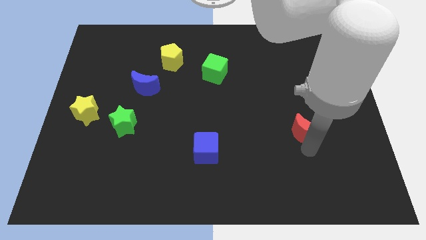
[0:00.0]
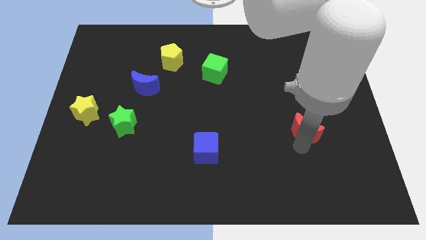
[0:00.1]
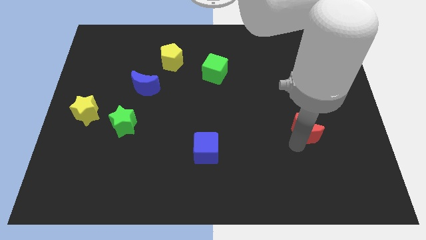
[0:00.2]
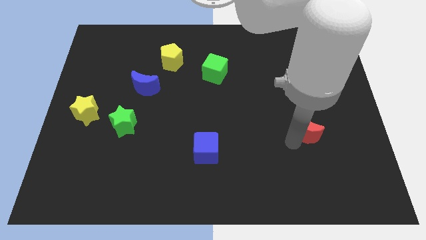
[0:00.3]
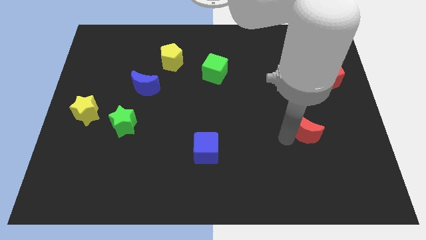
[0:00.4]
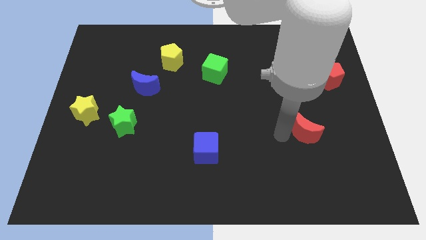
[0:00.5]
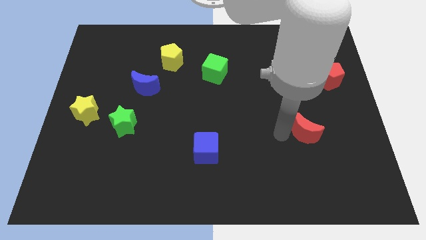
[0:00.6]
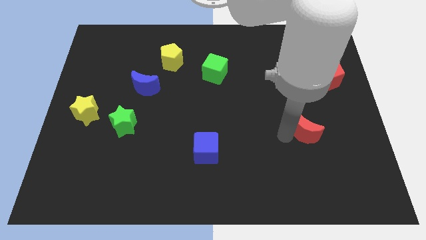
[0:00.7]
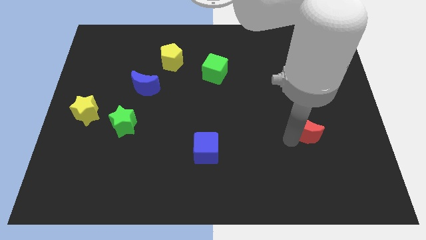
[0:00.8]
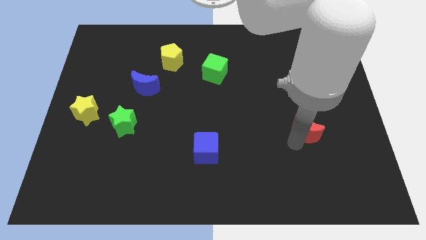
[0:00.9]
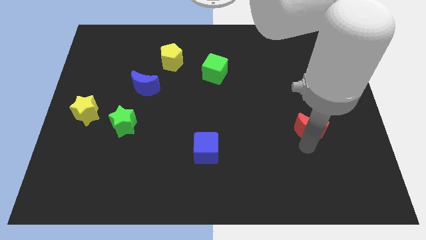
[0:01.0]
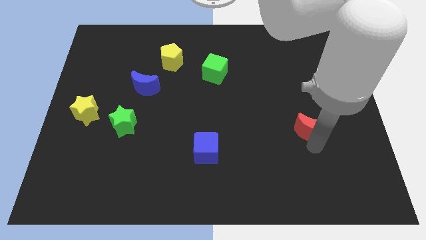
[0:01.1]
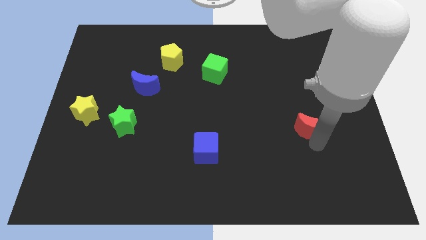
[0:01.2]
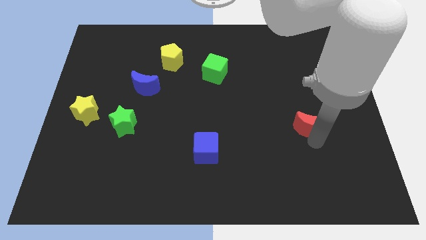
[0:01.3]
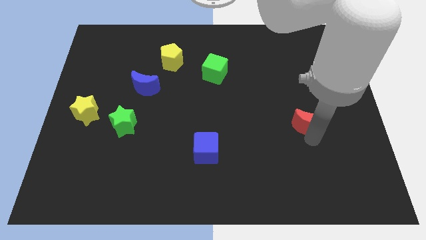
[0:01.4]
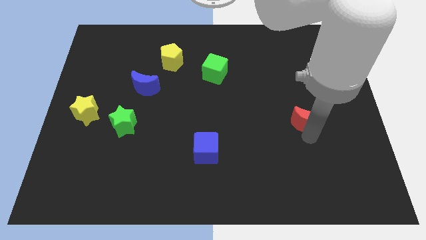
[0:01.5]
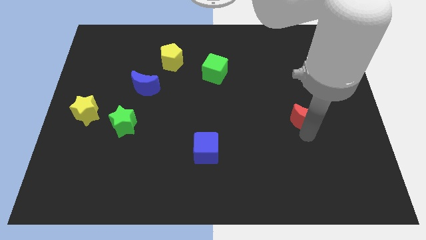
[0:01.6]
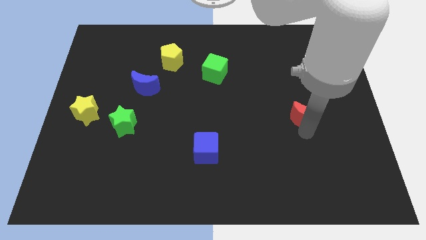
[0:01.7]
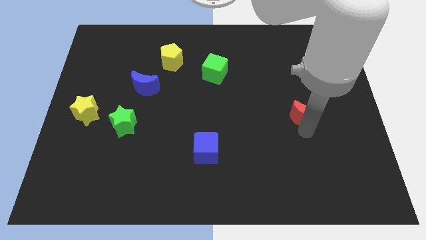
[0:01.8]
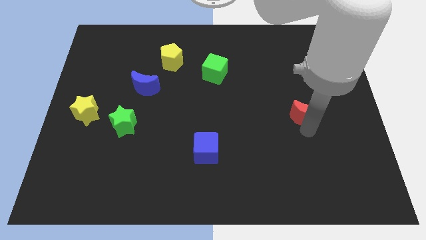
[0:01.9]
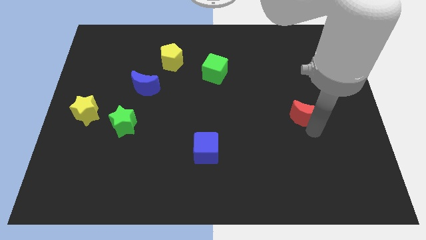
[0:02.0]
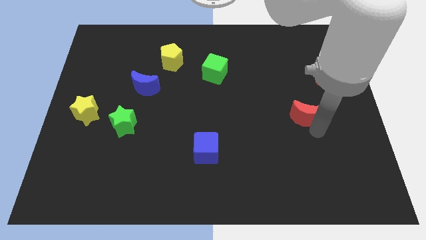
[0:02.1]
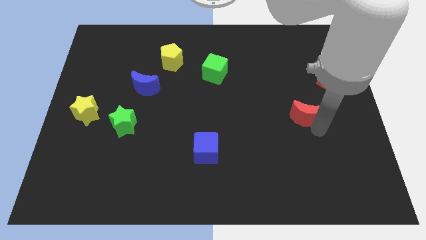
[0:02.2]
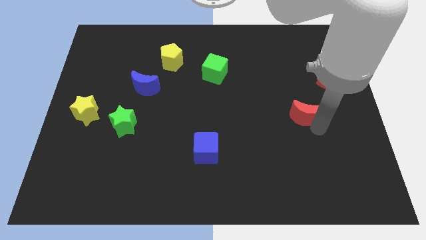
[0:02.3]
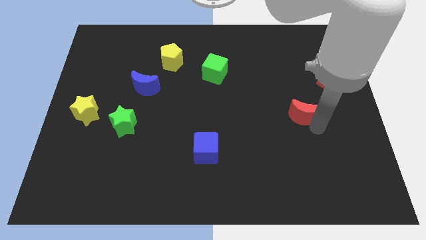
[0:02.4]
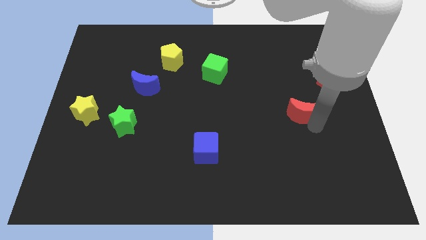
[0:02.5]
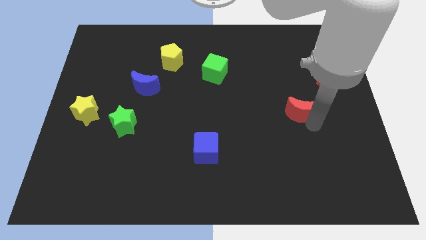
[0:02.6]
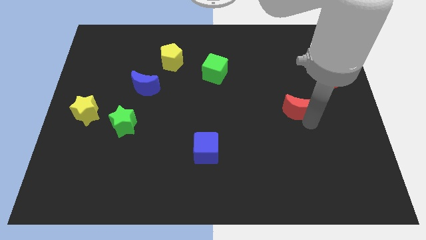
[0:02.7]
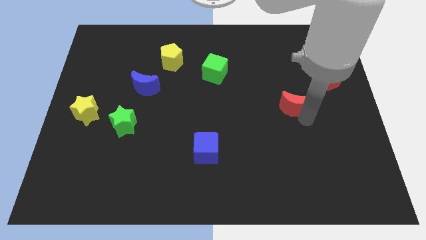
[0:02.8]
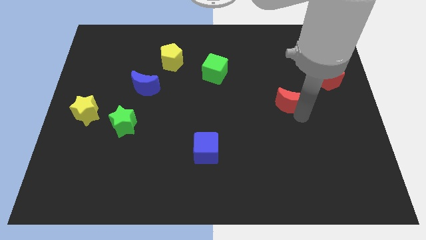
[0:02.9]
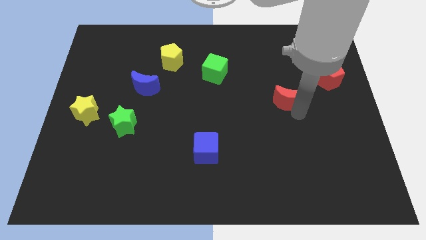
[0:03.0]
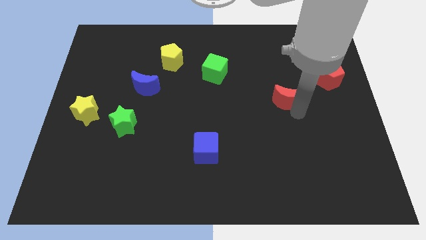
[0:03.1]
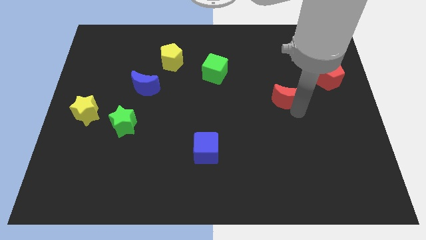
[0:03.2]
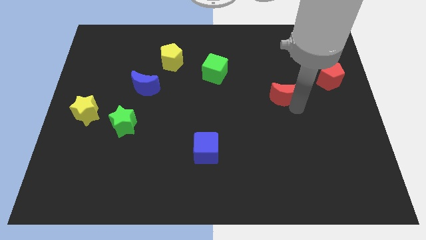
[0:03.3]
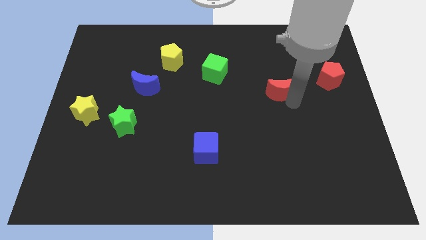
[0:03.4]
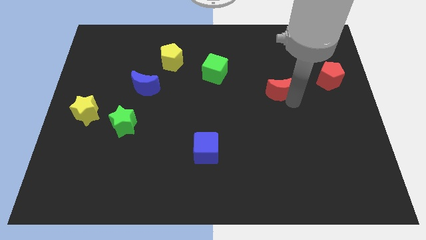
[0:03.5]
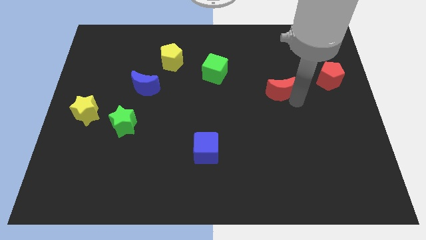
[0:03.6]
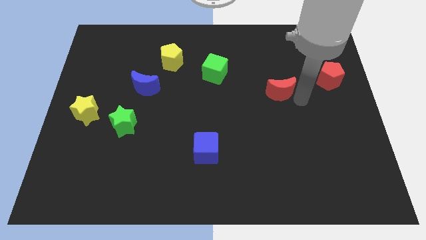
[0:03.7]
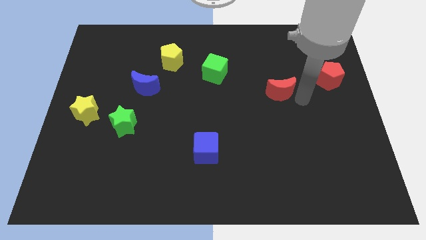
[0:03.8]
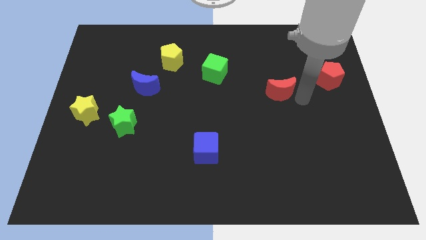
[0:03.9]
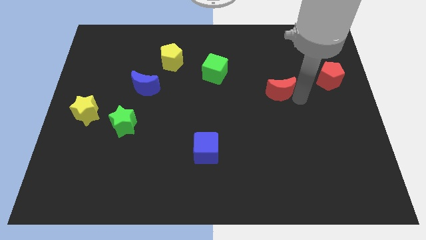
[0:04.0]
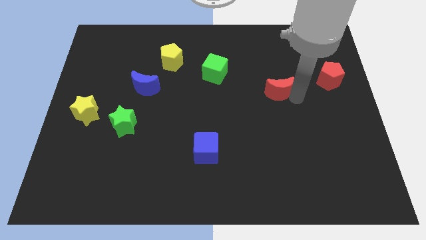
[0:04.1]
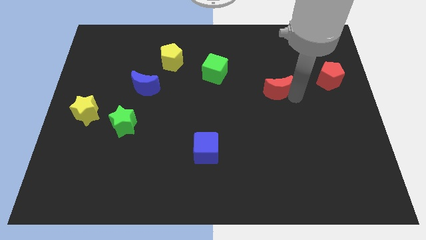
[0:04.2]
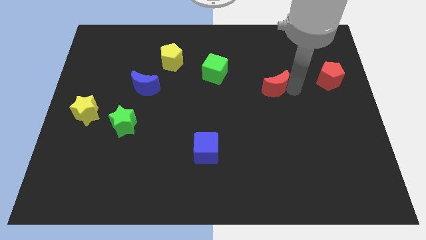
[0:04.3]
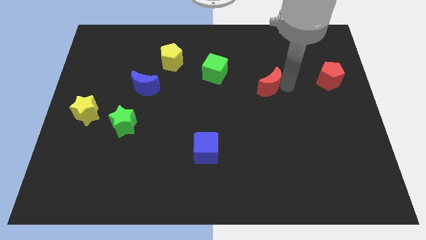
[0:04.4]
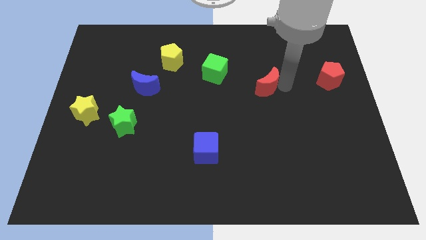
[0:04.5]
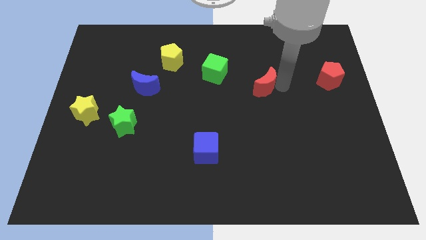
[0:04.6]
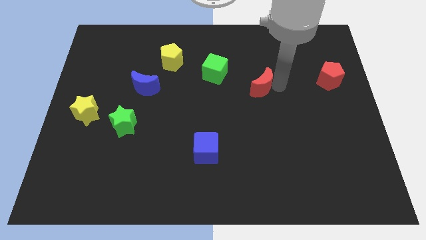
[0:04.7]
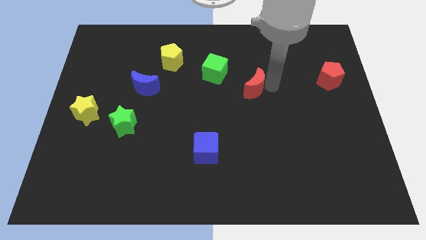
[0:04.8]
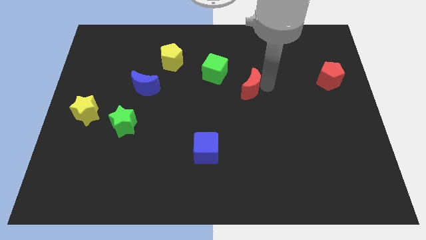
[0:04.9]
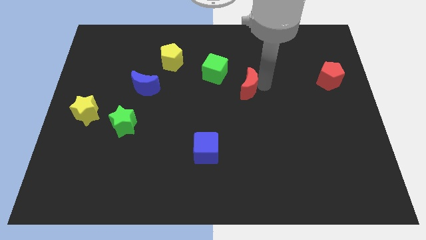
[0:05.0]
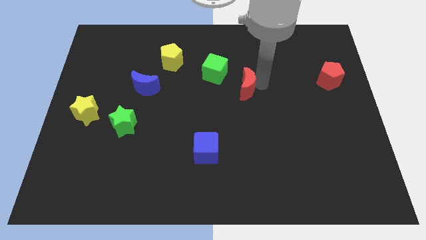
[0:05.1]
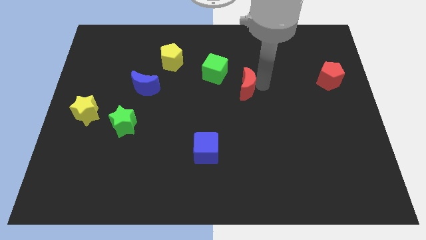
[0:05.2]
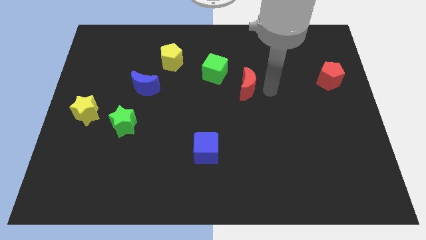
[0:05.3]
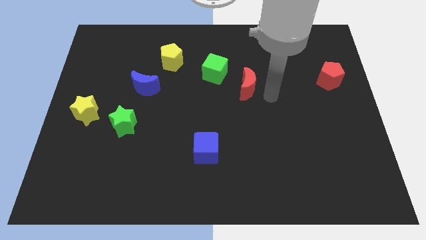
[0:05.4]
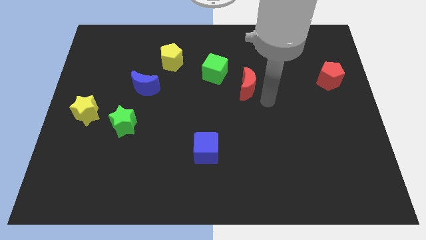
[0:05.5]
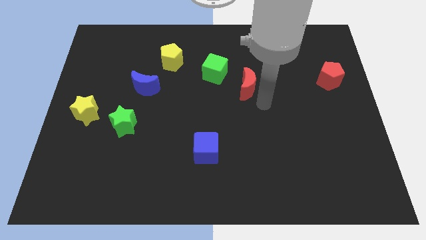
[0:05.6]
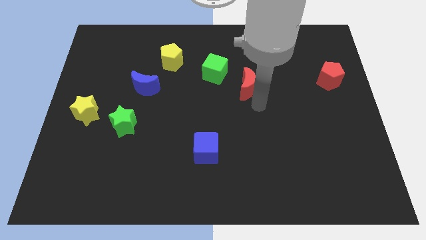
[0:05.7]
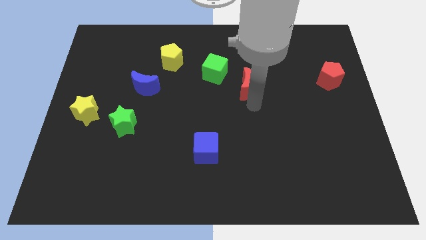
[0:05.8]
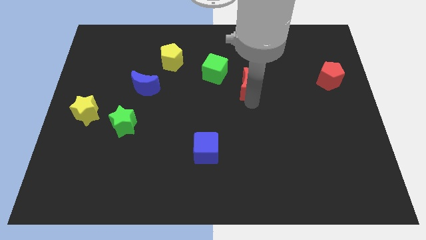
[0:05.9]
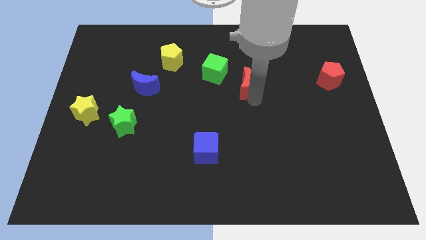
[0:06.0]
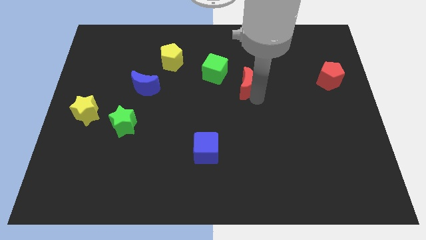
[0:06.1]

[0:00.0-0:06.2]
slide red moon towards green cube

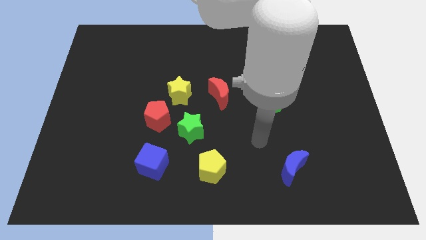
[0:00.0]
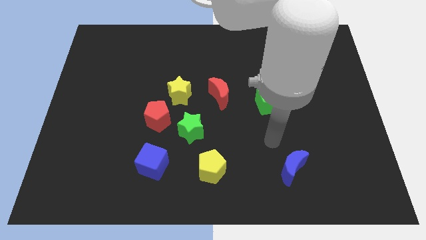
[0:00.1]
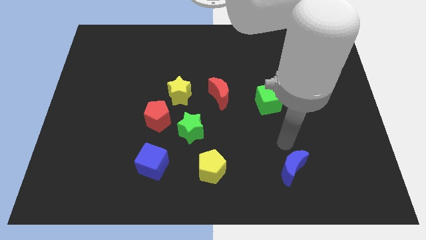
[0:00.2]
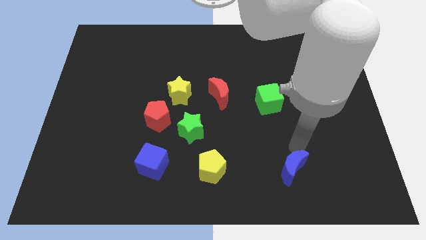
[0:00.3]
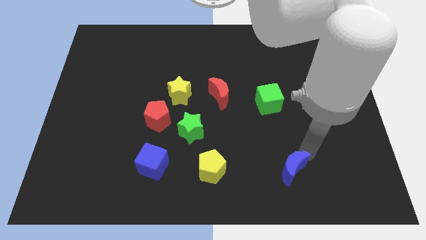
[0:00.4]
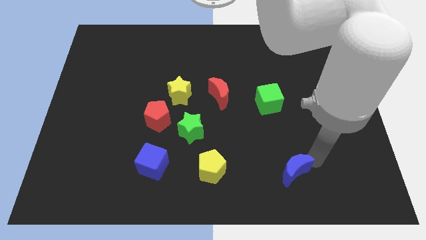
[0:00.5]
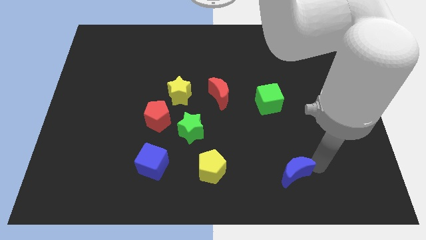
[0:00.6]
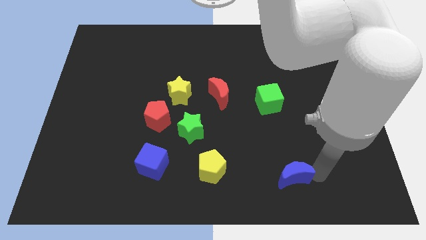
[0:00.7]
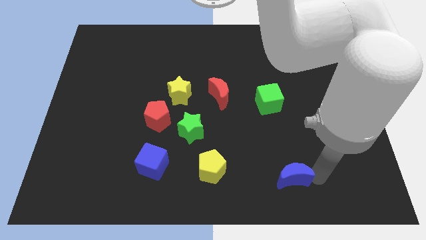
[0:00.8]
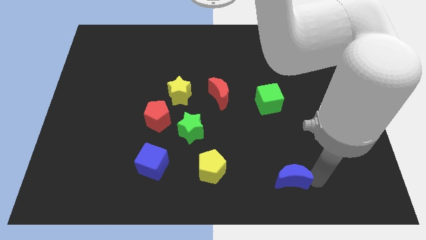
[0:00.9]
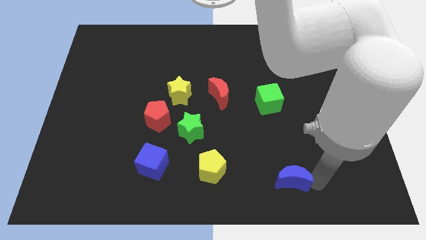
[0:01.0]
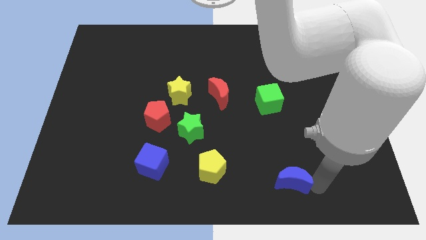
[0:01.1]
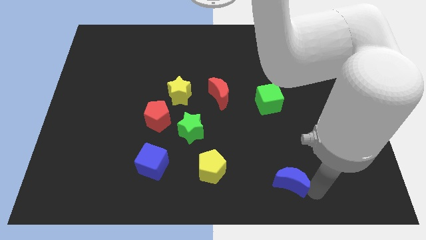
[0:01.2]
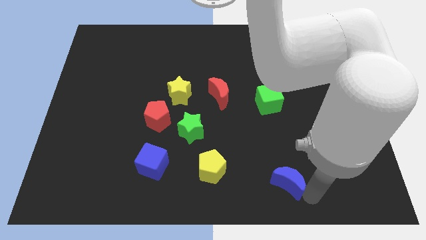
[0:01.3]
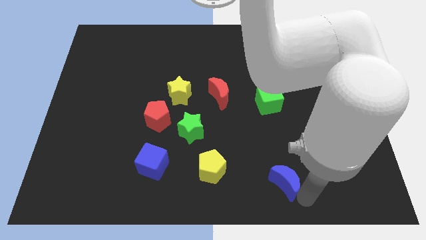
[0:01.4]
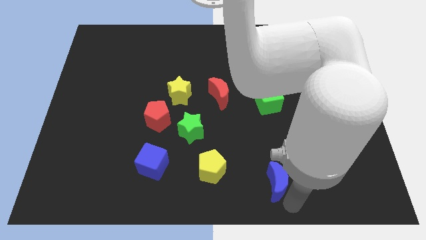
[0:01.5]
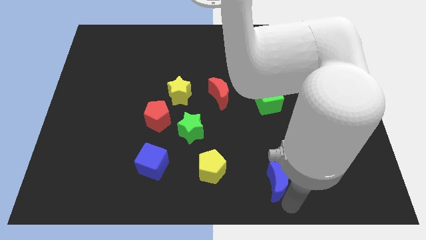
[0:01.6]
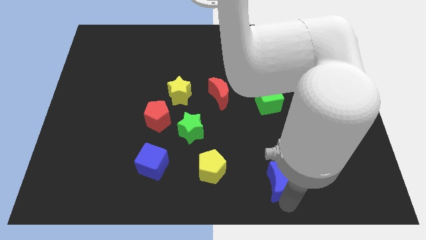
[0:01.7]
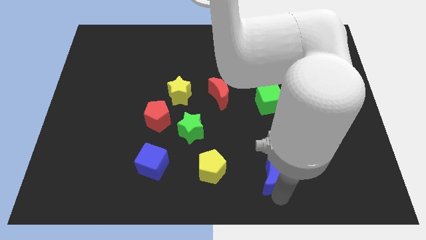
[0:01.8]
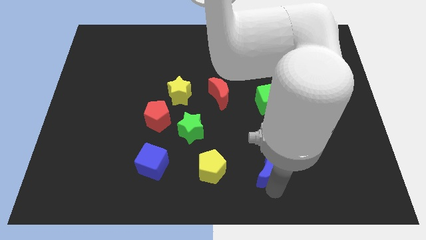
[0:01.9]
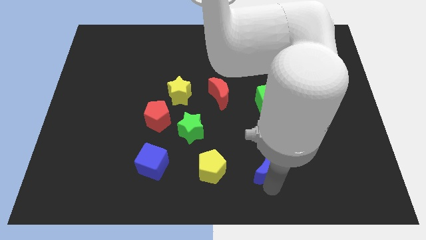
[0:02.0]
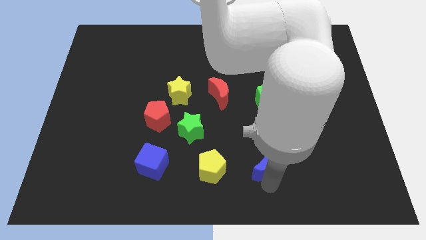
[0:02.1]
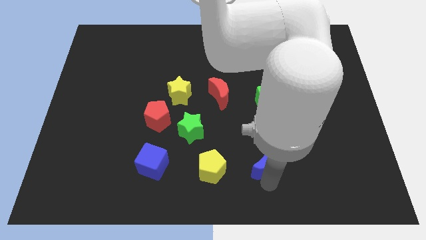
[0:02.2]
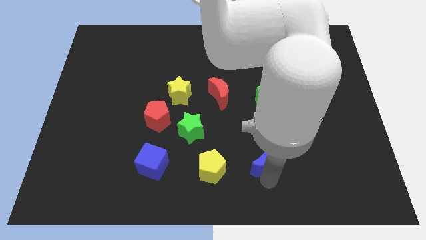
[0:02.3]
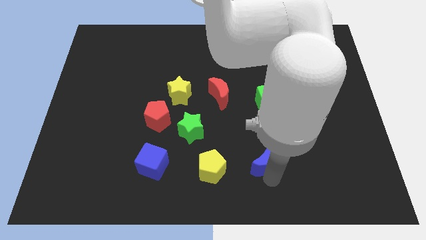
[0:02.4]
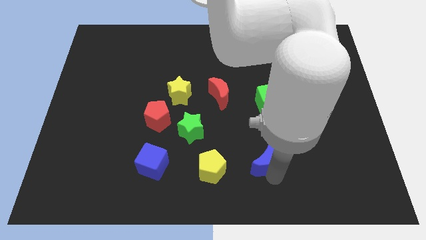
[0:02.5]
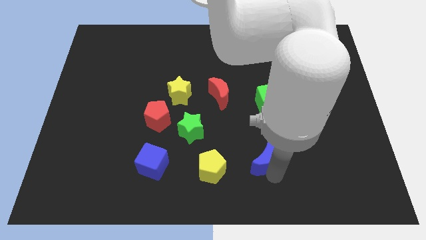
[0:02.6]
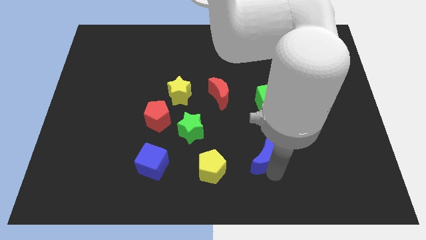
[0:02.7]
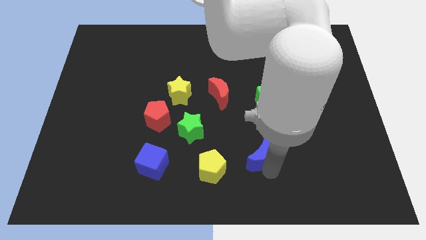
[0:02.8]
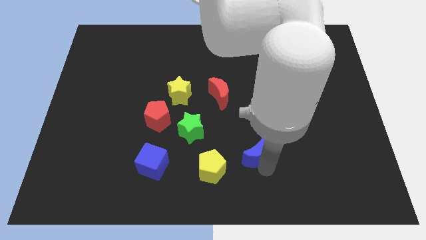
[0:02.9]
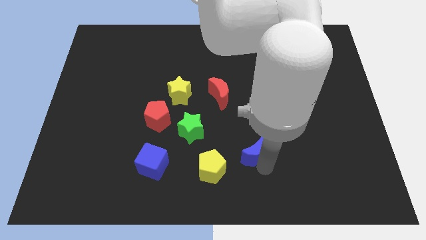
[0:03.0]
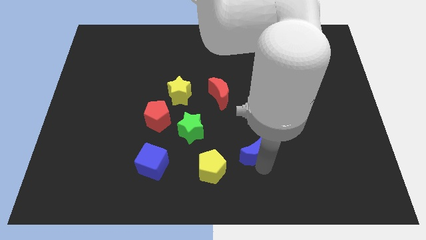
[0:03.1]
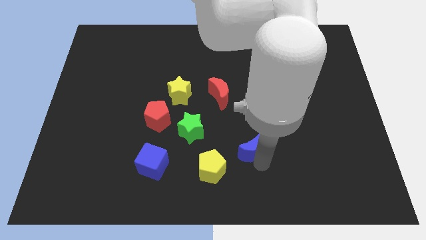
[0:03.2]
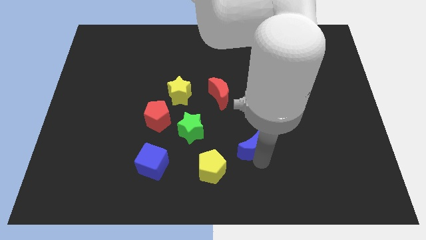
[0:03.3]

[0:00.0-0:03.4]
move the blue crescent diagonally bottom left to the green cube
